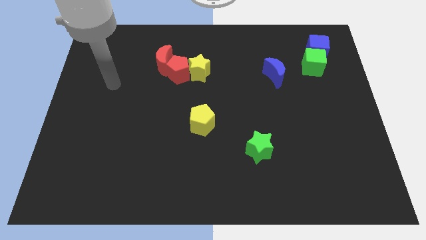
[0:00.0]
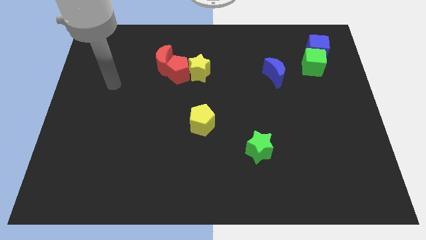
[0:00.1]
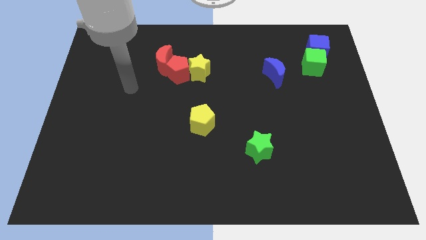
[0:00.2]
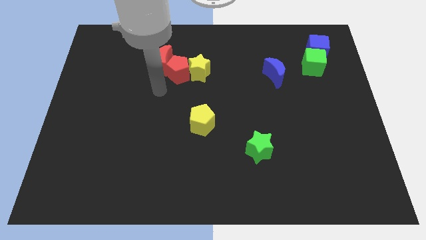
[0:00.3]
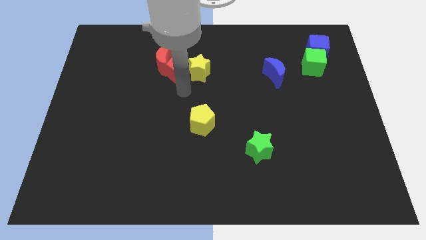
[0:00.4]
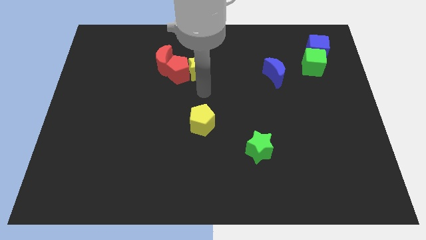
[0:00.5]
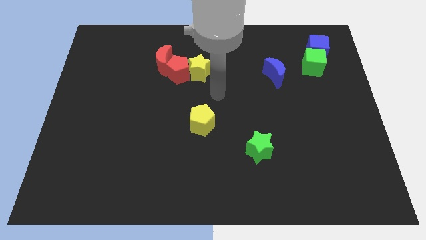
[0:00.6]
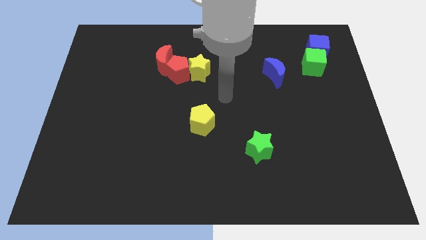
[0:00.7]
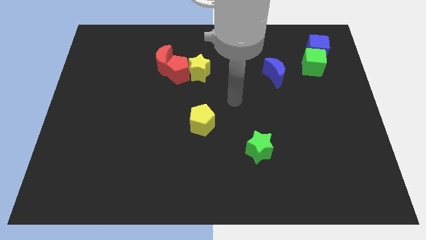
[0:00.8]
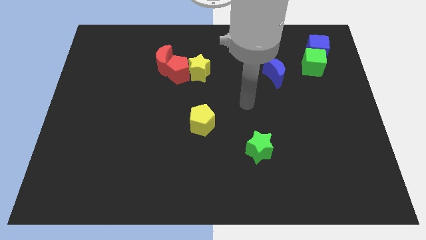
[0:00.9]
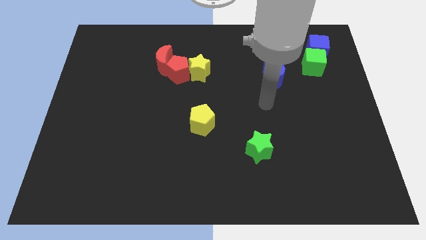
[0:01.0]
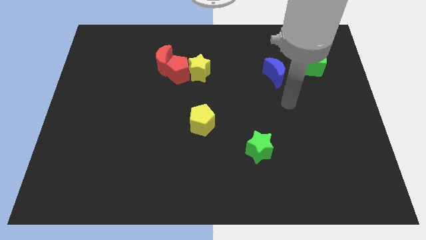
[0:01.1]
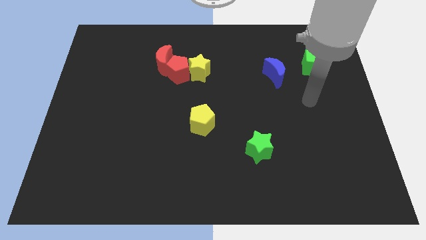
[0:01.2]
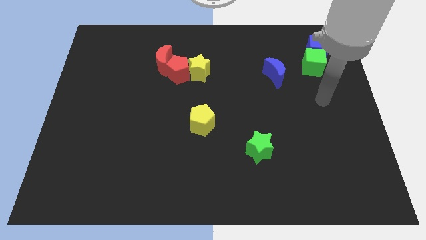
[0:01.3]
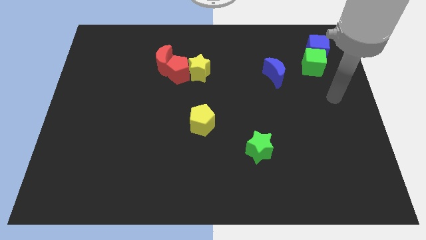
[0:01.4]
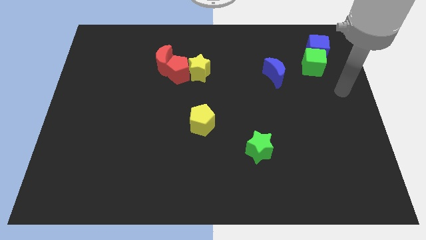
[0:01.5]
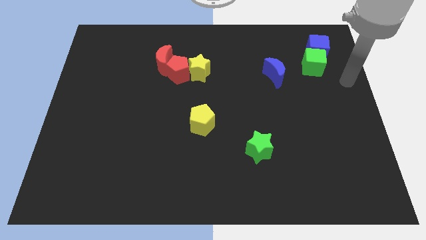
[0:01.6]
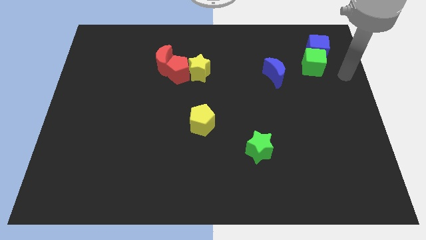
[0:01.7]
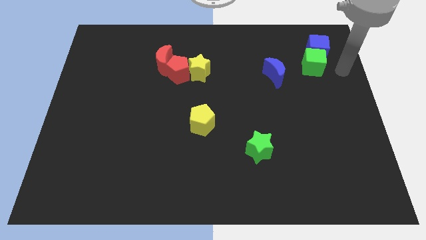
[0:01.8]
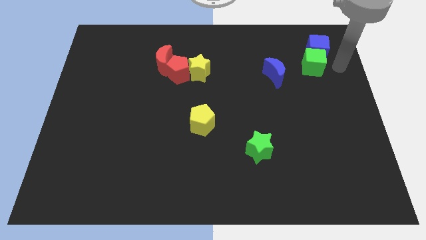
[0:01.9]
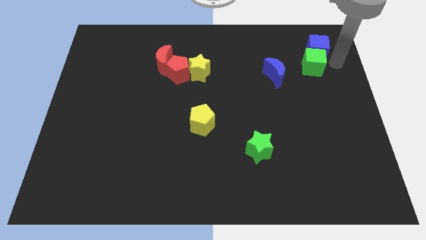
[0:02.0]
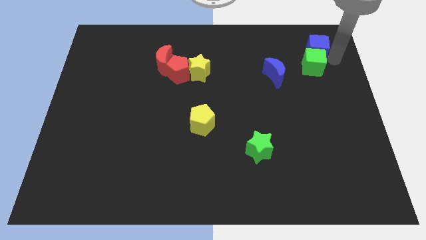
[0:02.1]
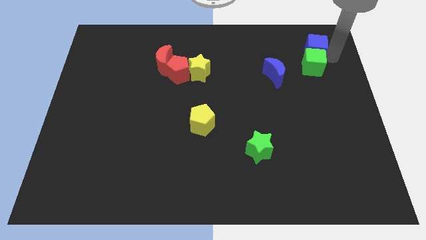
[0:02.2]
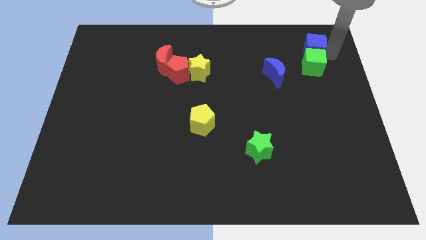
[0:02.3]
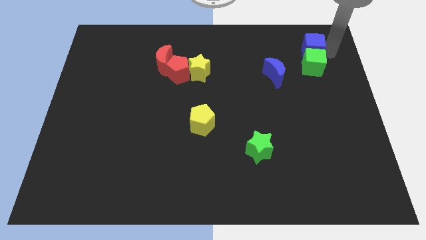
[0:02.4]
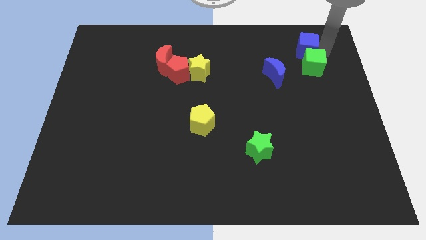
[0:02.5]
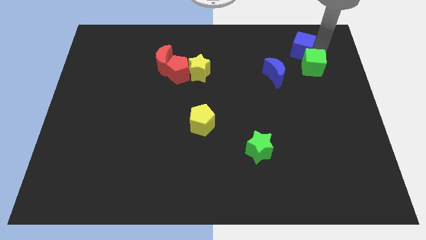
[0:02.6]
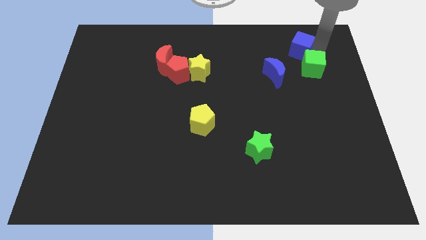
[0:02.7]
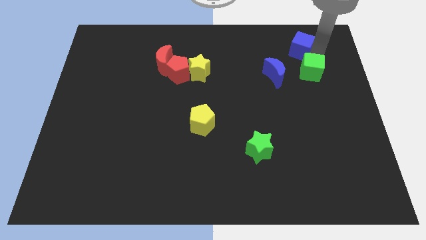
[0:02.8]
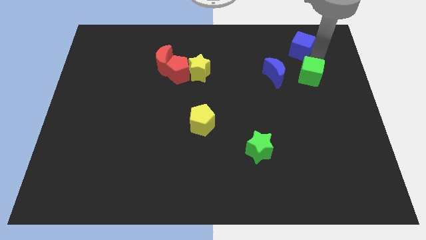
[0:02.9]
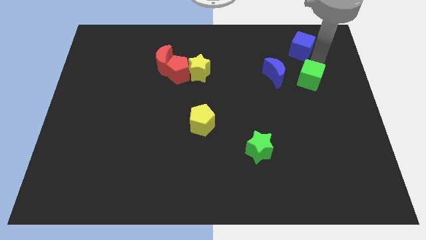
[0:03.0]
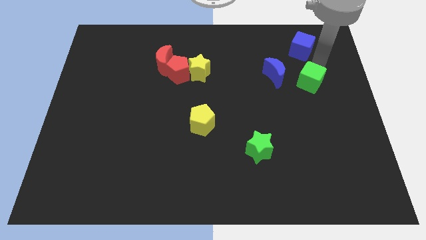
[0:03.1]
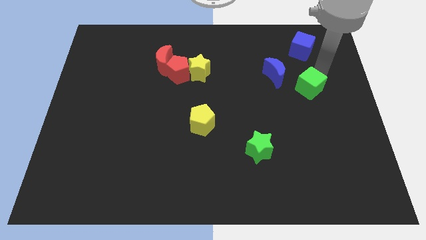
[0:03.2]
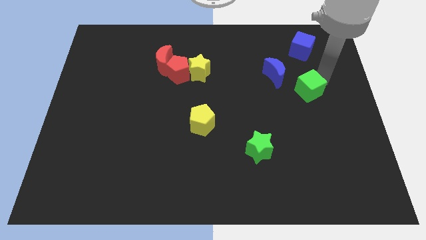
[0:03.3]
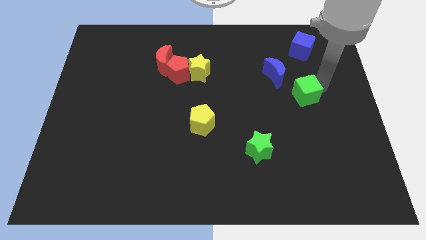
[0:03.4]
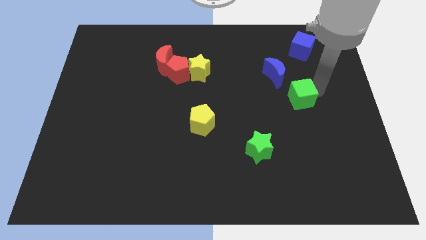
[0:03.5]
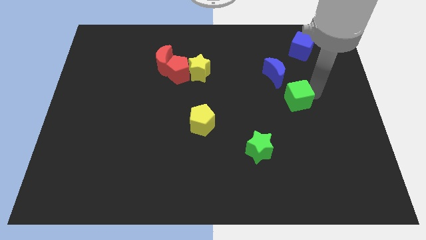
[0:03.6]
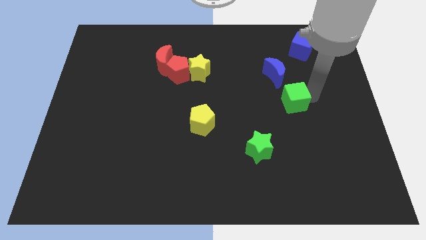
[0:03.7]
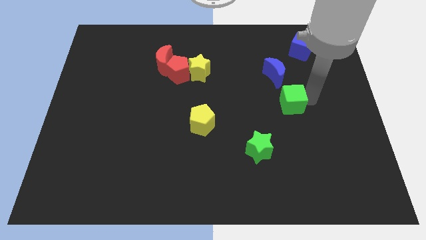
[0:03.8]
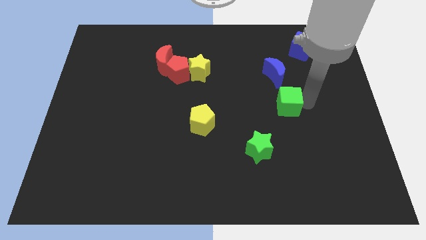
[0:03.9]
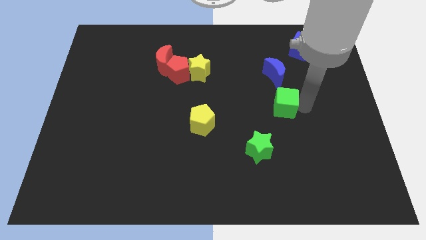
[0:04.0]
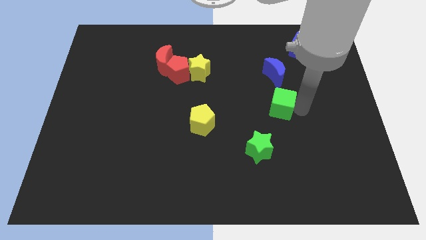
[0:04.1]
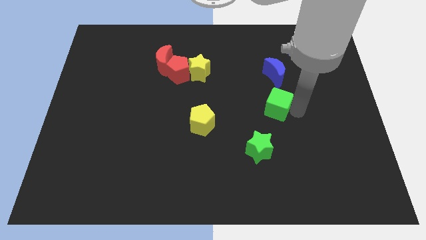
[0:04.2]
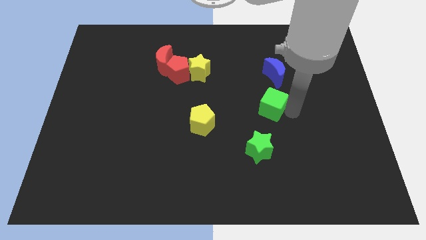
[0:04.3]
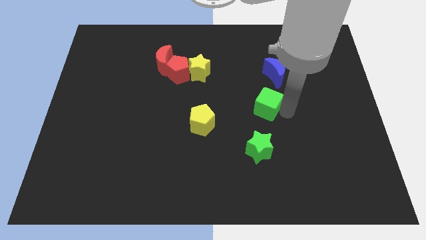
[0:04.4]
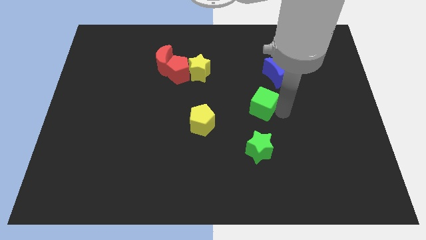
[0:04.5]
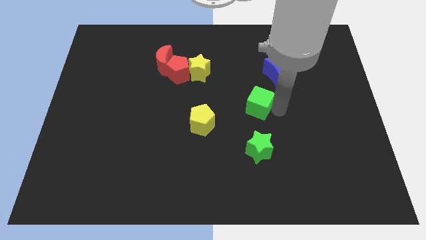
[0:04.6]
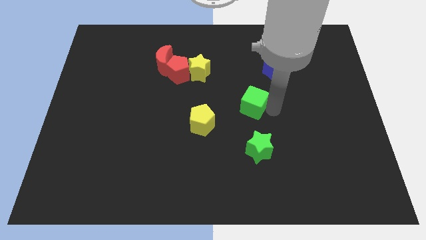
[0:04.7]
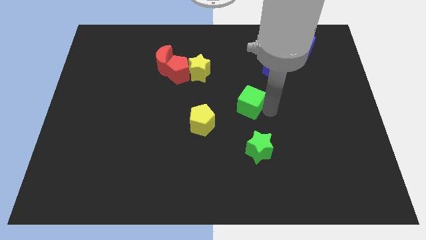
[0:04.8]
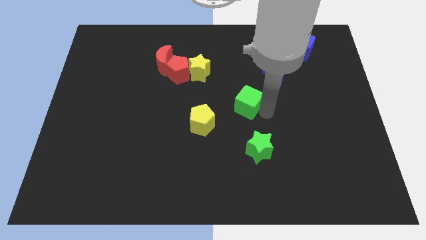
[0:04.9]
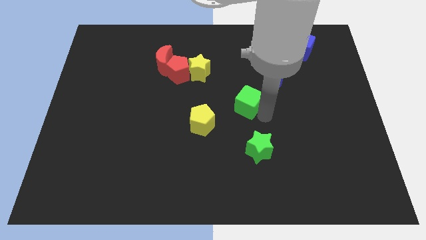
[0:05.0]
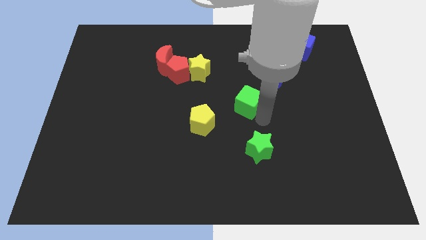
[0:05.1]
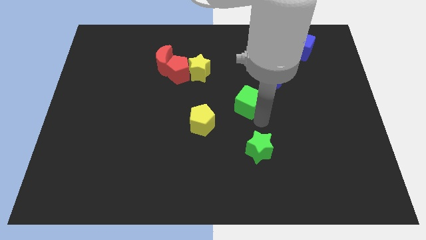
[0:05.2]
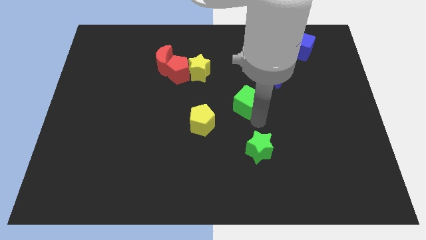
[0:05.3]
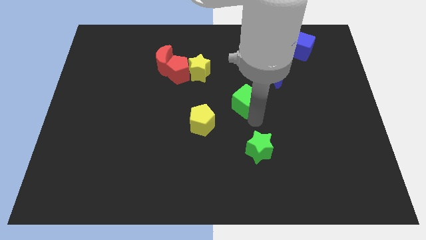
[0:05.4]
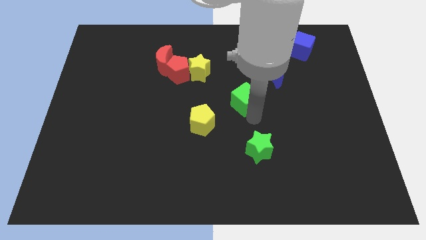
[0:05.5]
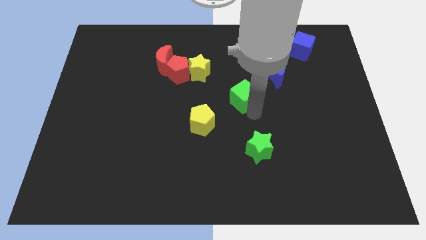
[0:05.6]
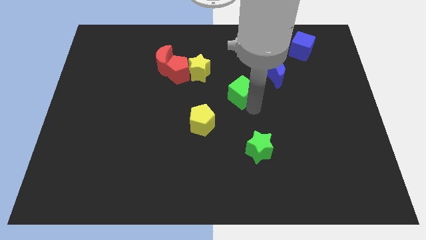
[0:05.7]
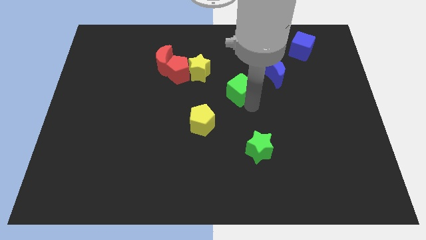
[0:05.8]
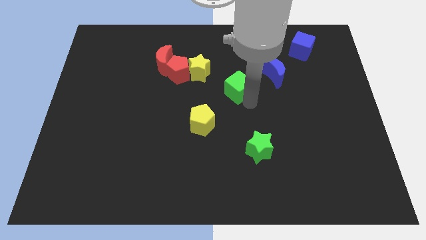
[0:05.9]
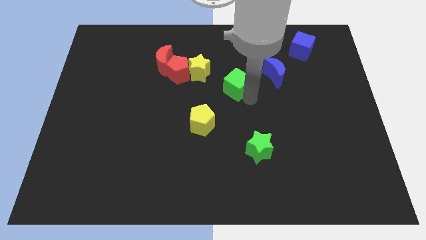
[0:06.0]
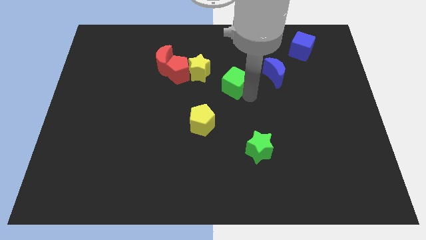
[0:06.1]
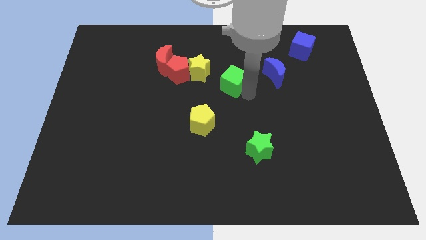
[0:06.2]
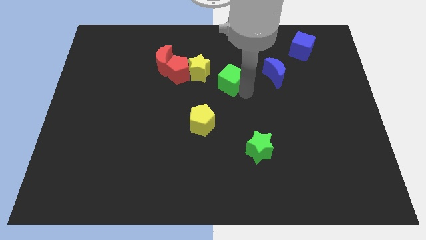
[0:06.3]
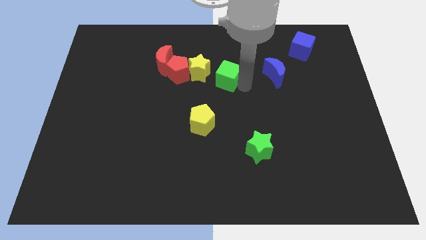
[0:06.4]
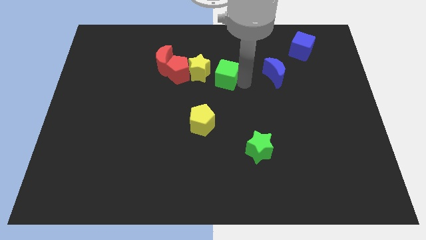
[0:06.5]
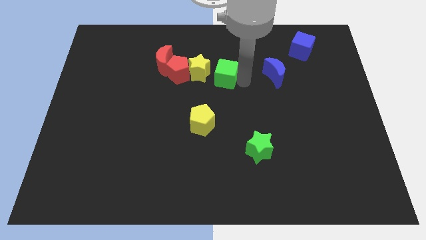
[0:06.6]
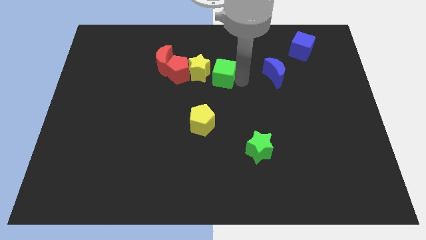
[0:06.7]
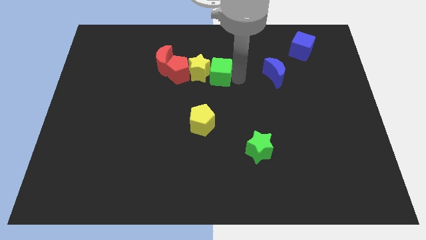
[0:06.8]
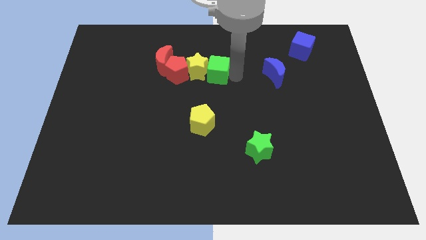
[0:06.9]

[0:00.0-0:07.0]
slide the green cube to the yellow star

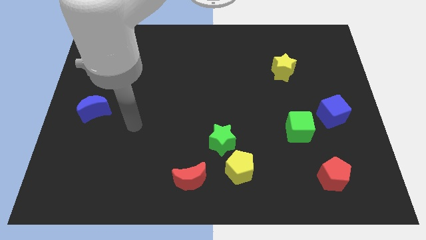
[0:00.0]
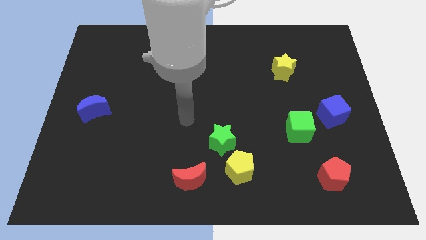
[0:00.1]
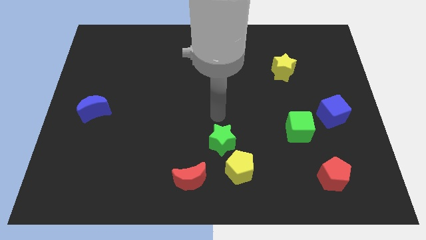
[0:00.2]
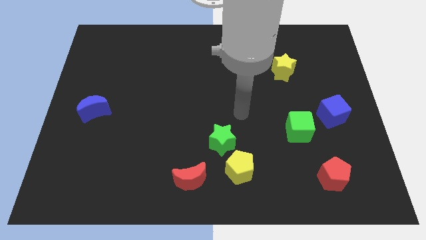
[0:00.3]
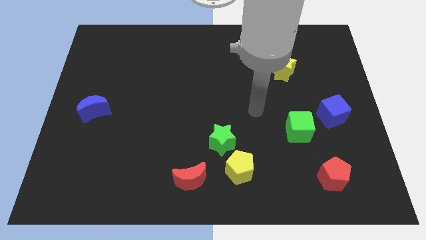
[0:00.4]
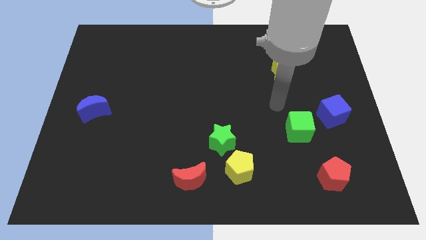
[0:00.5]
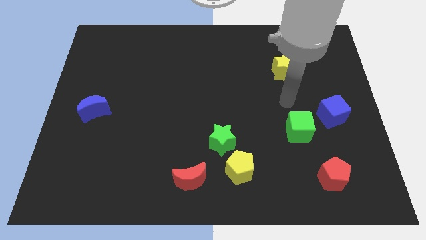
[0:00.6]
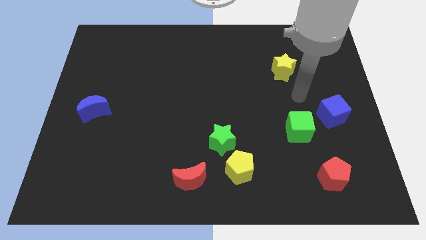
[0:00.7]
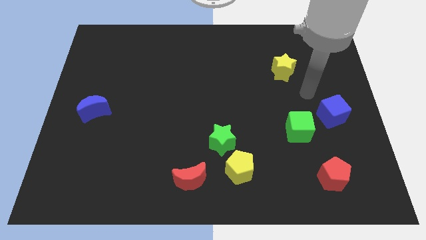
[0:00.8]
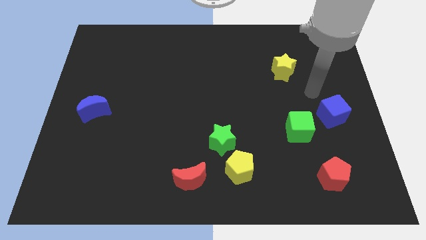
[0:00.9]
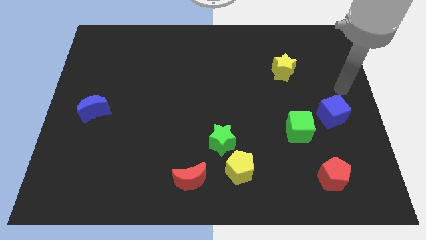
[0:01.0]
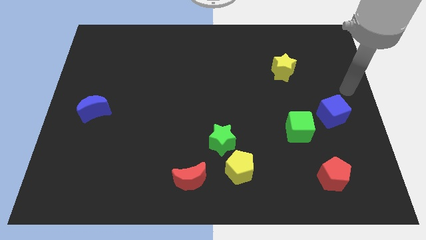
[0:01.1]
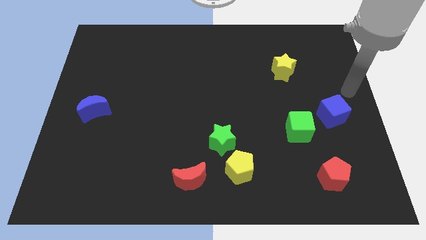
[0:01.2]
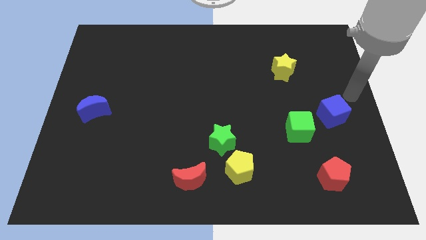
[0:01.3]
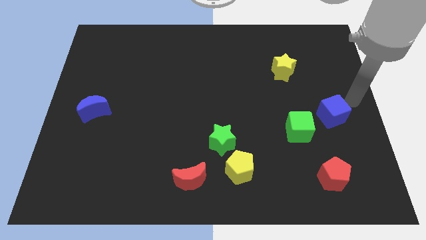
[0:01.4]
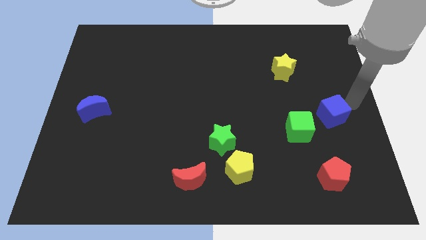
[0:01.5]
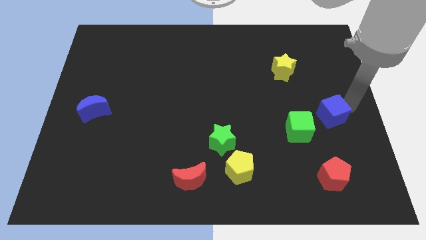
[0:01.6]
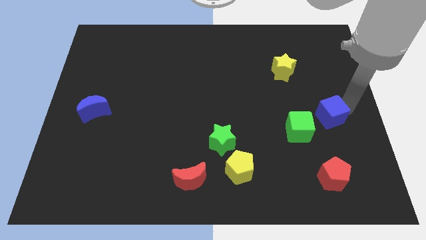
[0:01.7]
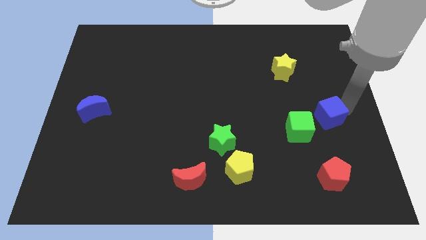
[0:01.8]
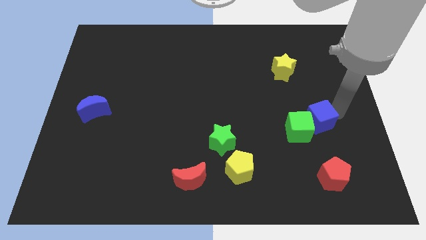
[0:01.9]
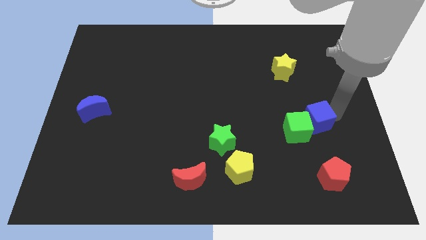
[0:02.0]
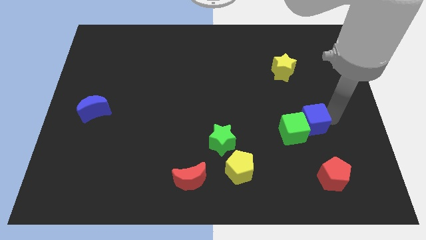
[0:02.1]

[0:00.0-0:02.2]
slide the blue cube close to the green cube
